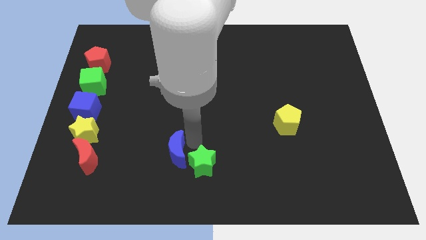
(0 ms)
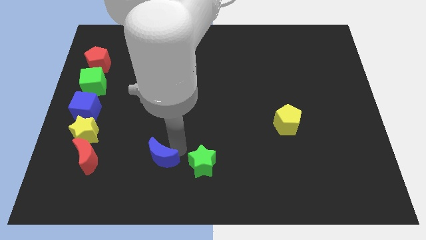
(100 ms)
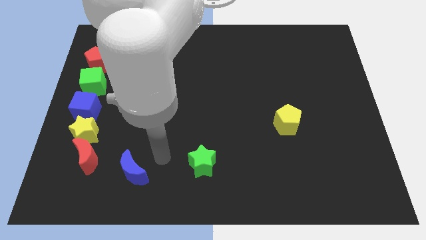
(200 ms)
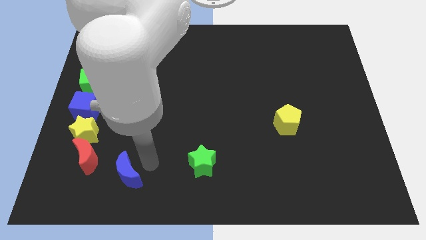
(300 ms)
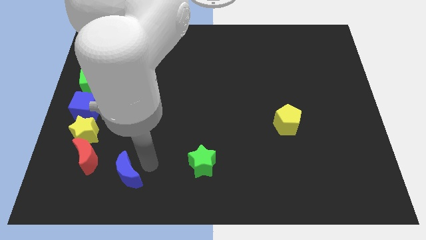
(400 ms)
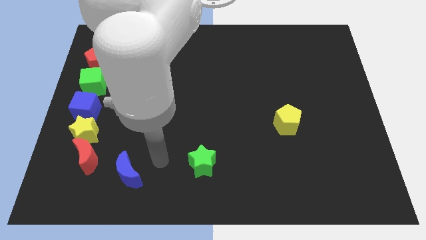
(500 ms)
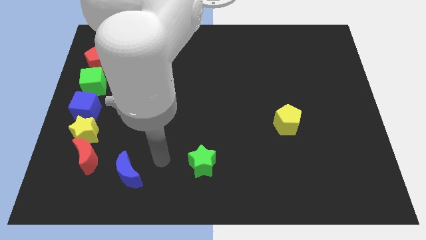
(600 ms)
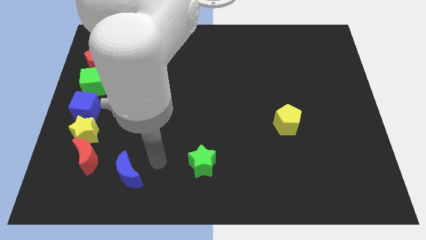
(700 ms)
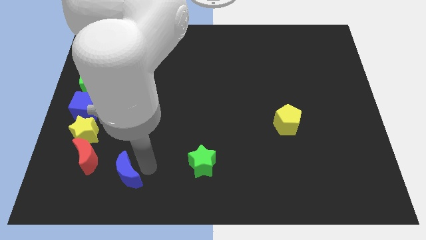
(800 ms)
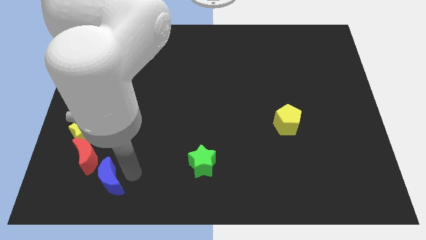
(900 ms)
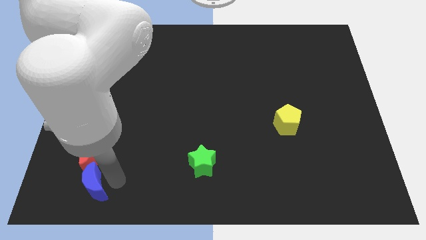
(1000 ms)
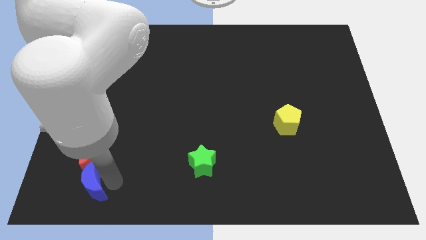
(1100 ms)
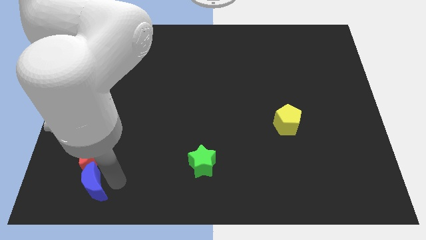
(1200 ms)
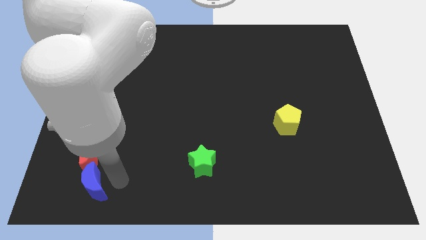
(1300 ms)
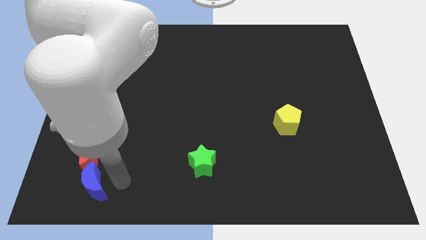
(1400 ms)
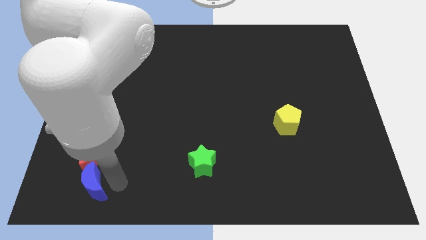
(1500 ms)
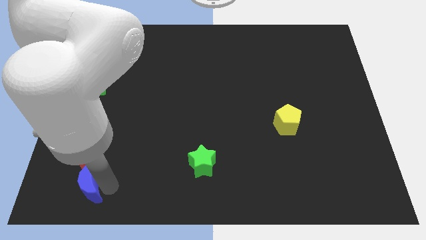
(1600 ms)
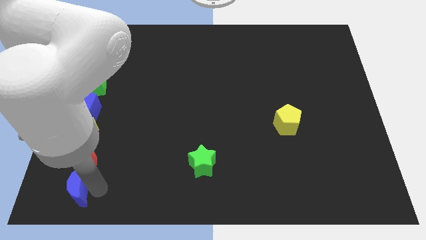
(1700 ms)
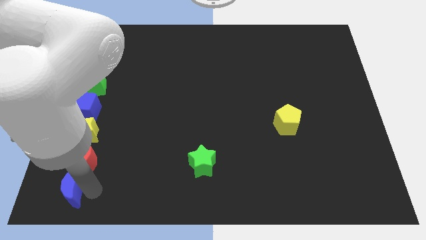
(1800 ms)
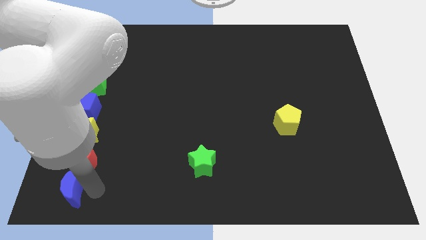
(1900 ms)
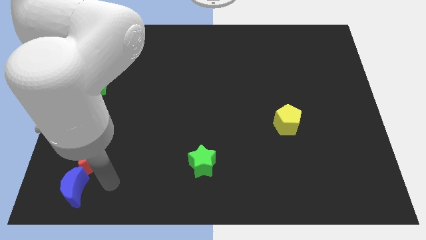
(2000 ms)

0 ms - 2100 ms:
place the blue moon vertical to the bottom of the red moon

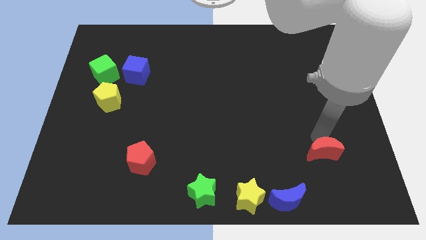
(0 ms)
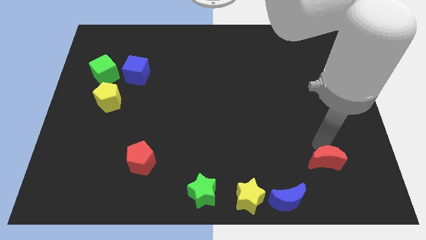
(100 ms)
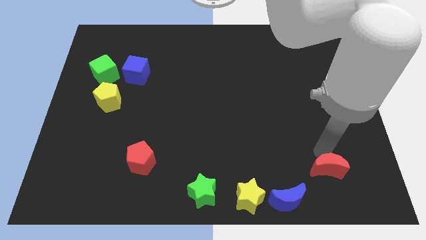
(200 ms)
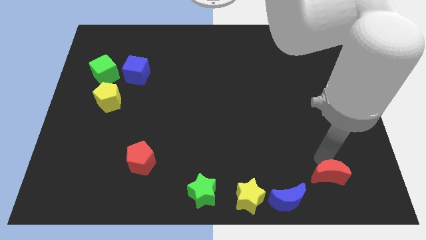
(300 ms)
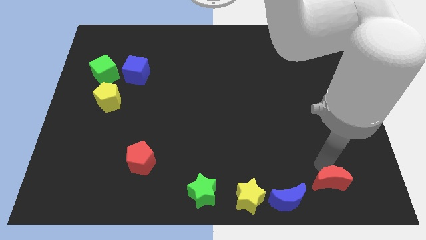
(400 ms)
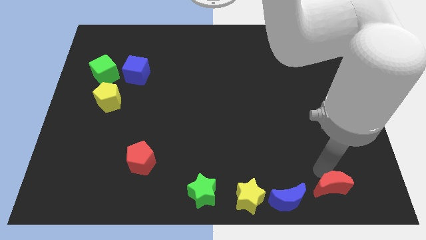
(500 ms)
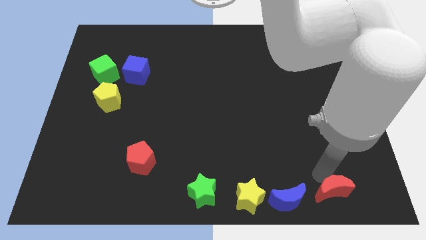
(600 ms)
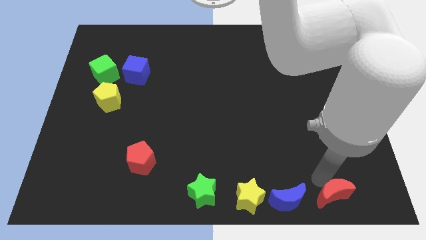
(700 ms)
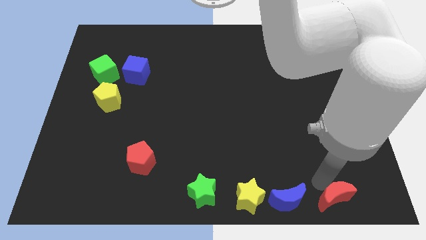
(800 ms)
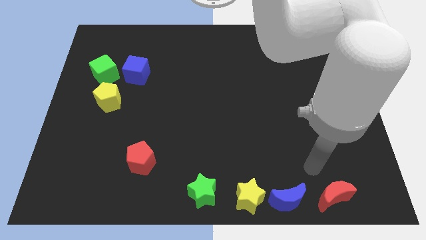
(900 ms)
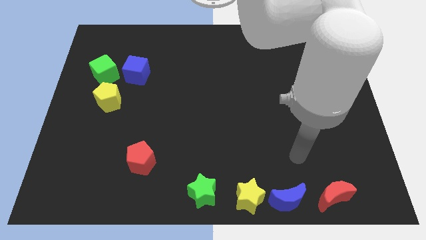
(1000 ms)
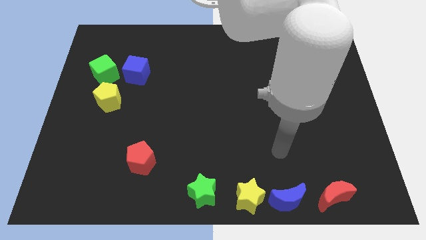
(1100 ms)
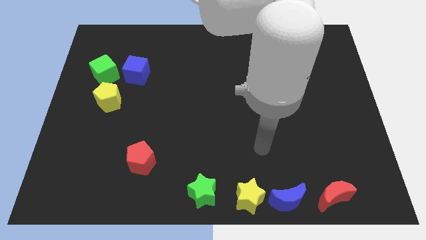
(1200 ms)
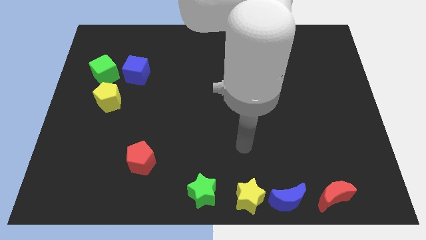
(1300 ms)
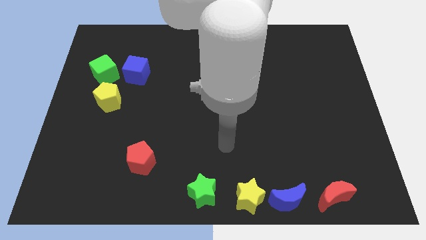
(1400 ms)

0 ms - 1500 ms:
place the red crescent to right side of the blue crescent

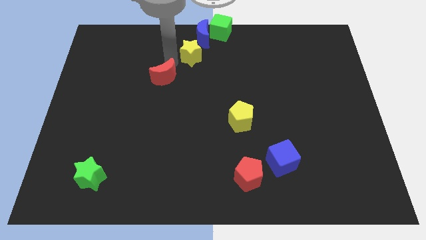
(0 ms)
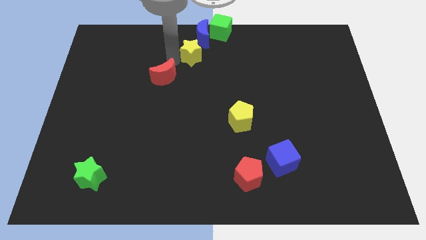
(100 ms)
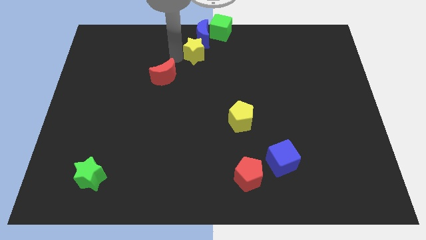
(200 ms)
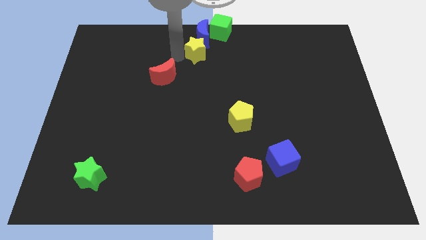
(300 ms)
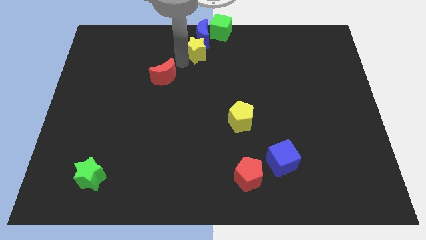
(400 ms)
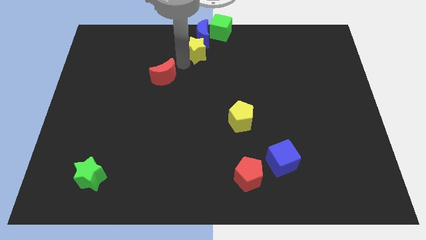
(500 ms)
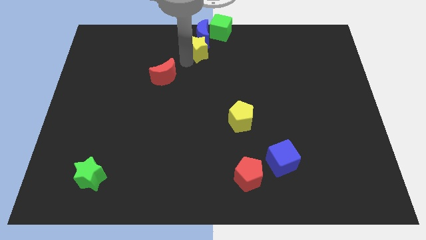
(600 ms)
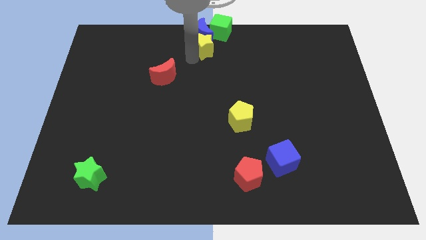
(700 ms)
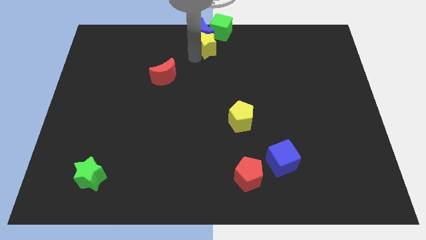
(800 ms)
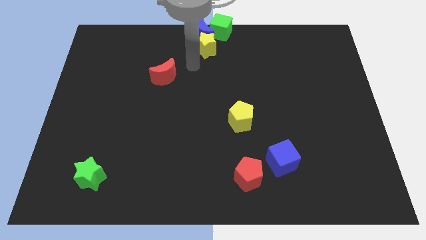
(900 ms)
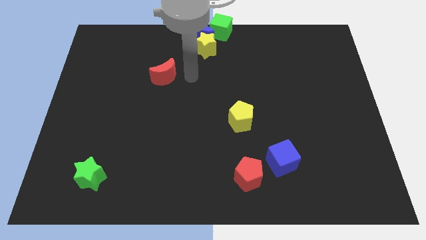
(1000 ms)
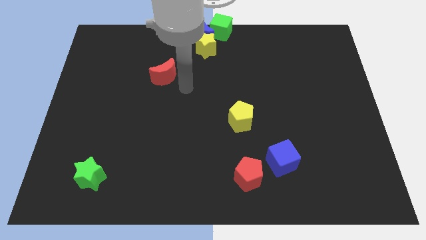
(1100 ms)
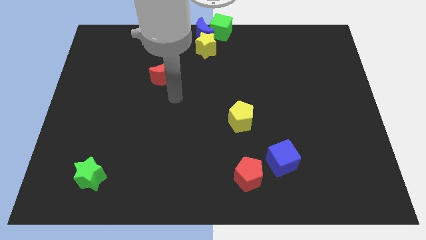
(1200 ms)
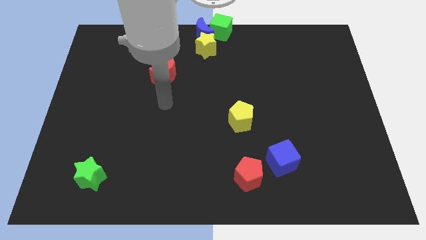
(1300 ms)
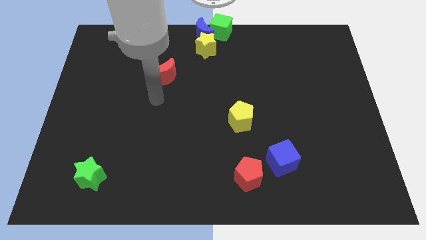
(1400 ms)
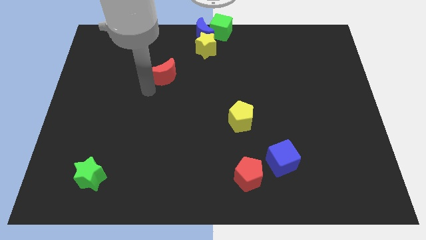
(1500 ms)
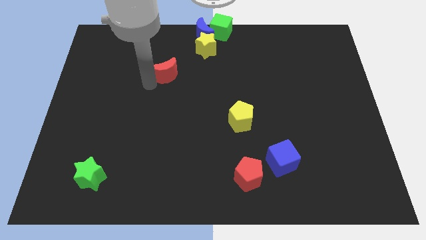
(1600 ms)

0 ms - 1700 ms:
push the yellow star into the blue crescent

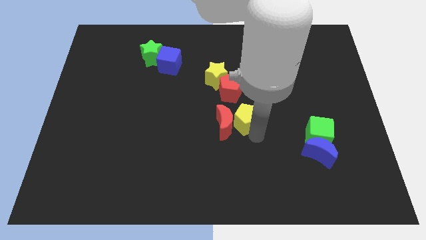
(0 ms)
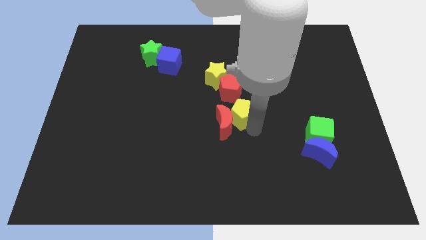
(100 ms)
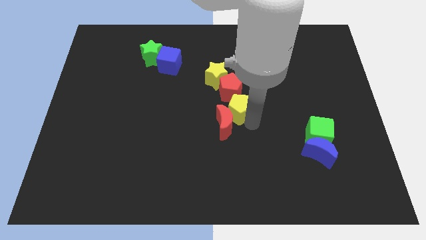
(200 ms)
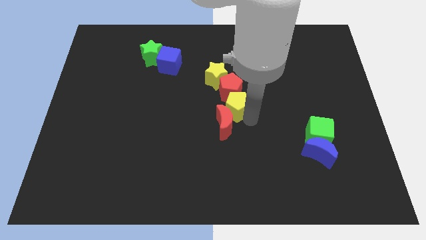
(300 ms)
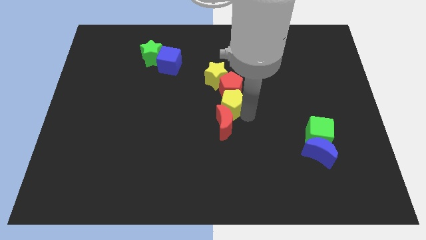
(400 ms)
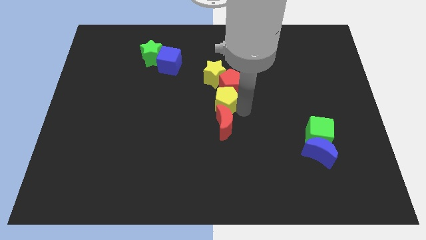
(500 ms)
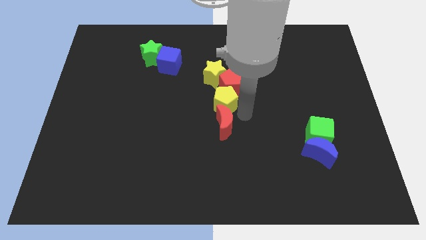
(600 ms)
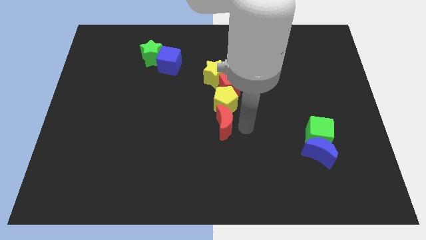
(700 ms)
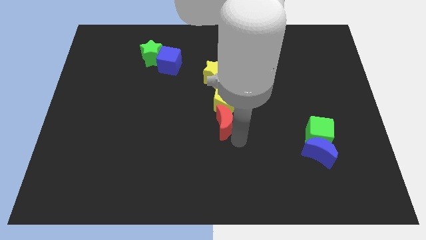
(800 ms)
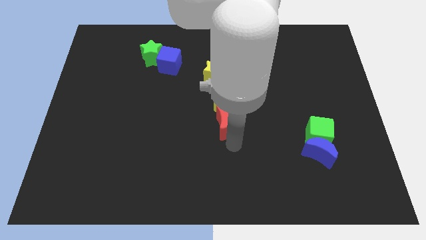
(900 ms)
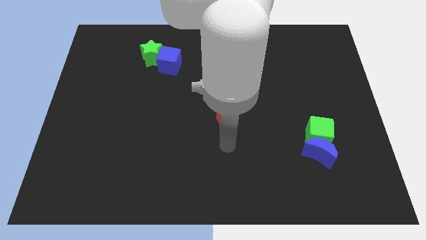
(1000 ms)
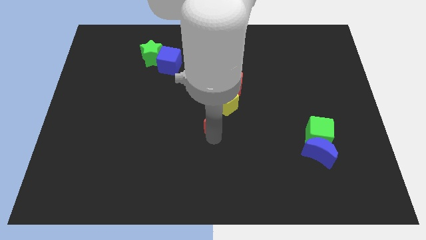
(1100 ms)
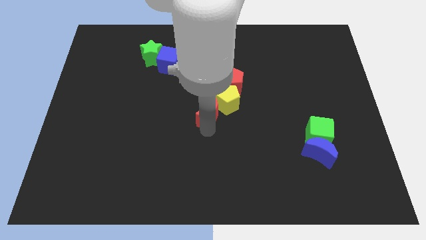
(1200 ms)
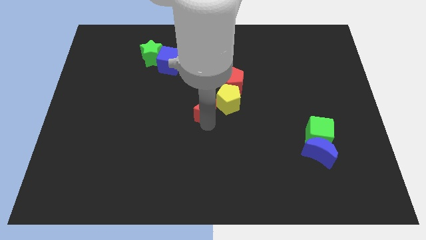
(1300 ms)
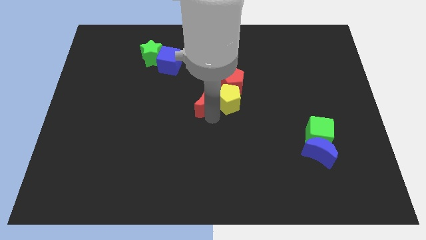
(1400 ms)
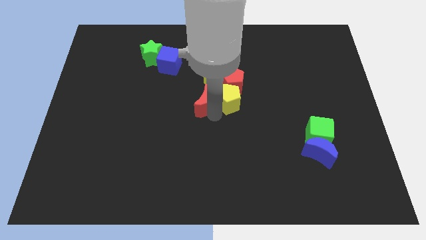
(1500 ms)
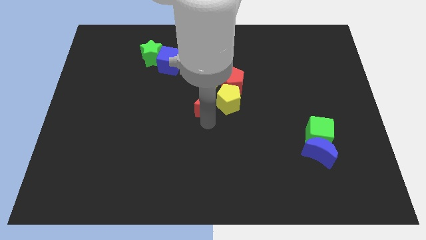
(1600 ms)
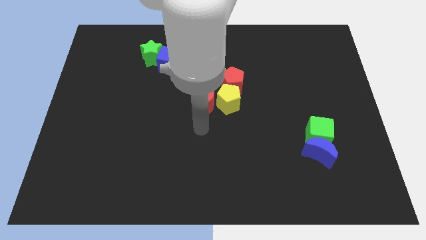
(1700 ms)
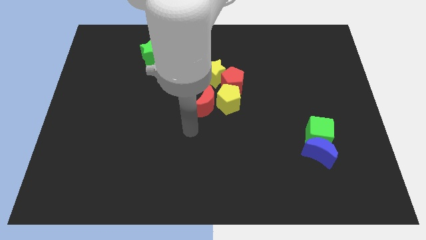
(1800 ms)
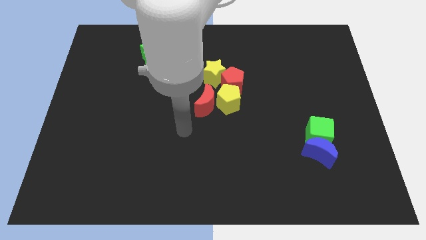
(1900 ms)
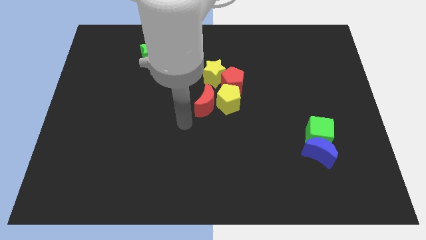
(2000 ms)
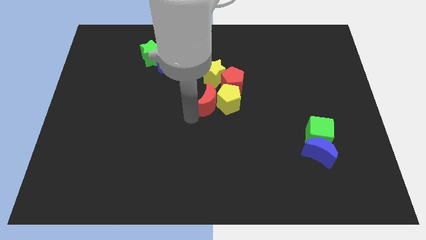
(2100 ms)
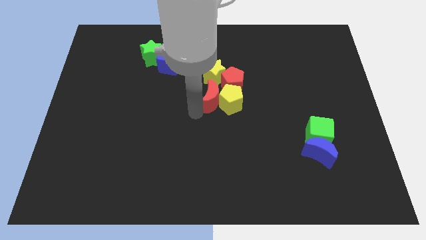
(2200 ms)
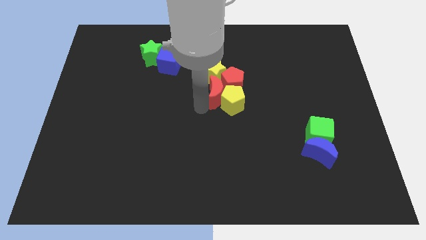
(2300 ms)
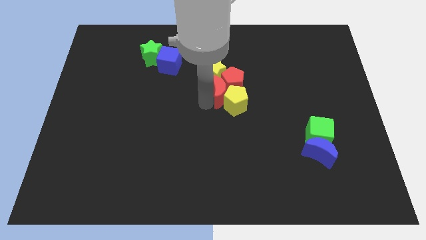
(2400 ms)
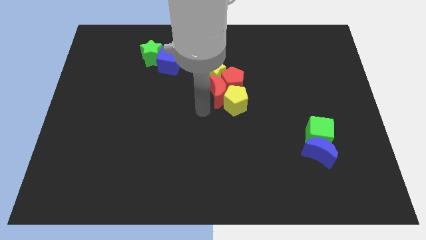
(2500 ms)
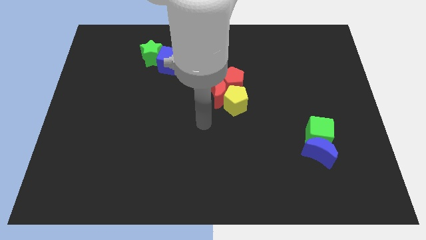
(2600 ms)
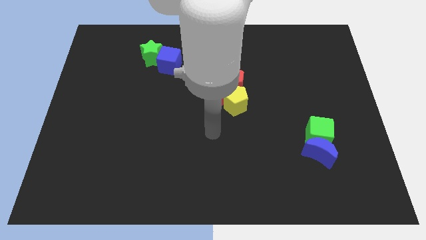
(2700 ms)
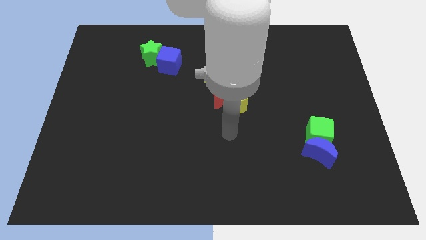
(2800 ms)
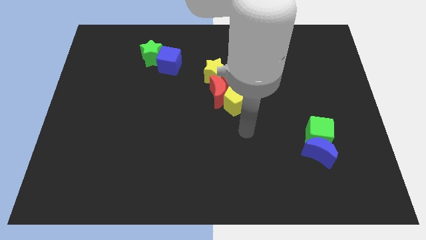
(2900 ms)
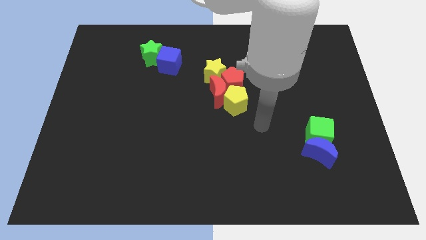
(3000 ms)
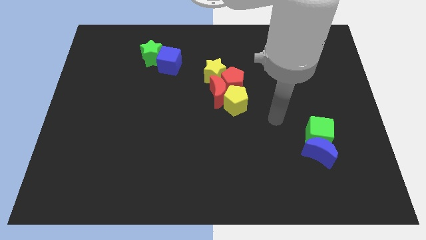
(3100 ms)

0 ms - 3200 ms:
push the yellow pentagon and red moon into the group of blocks

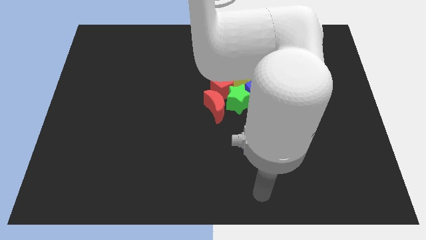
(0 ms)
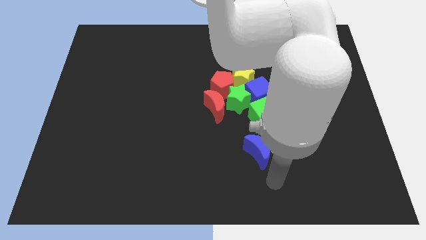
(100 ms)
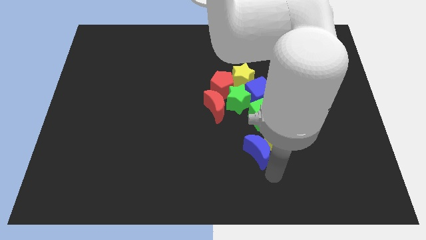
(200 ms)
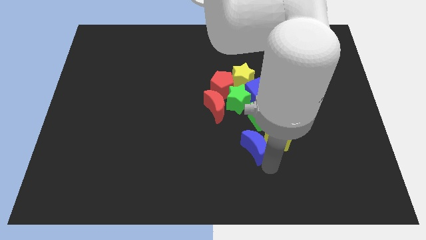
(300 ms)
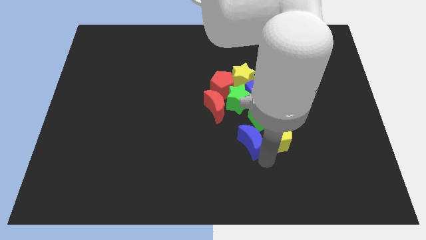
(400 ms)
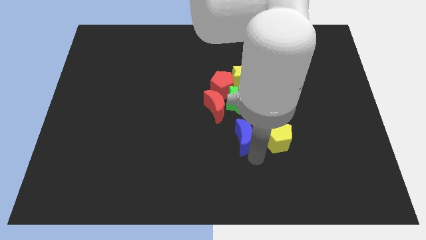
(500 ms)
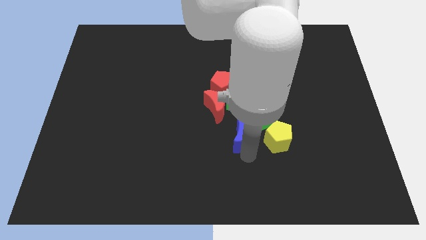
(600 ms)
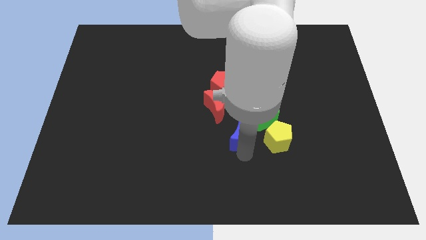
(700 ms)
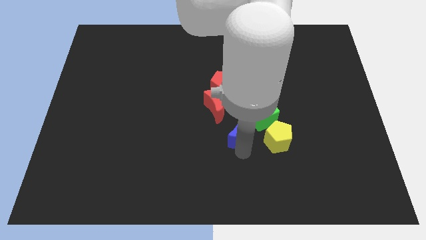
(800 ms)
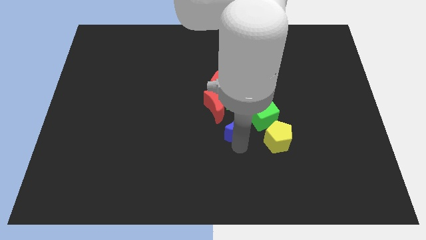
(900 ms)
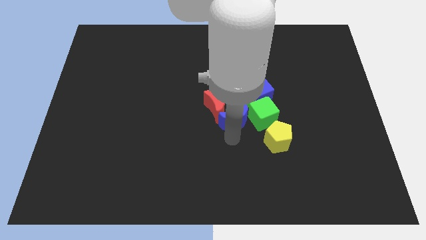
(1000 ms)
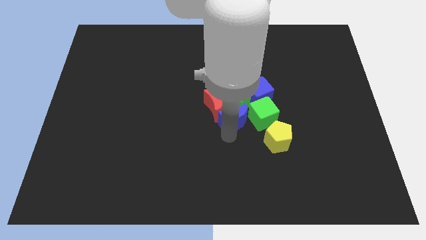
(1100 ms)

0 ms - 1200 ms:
place the blue crescent left of green cube
